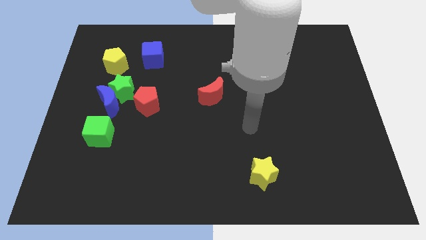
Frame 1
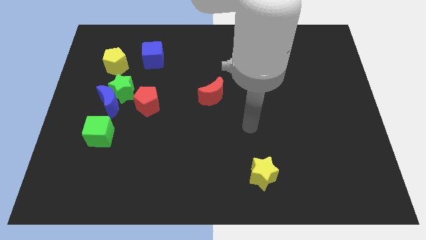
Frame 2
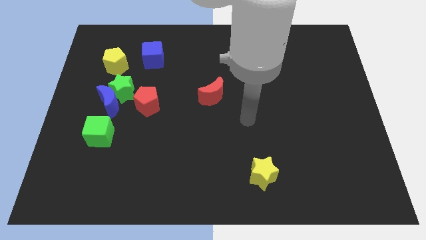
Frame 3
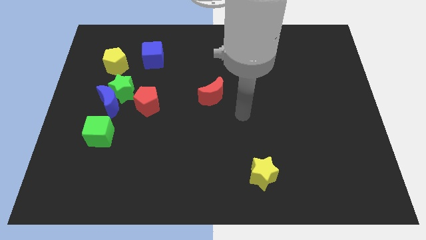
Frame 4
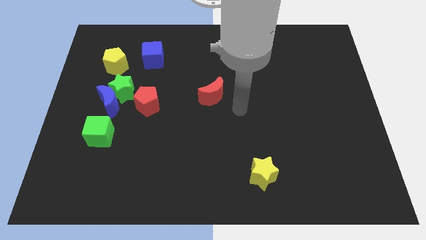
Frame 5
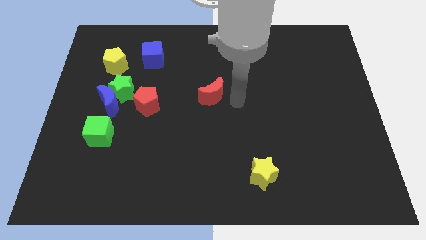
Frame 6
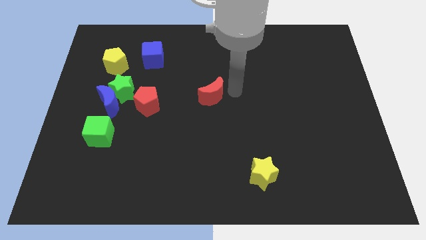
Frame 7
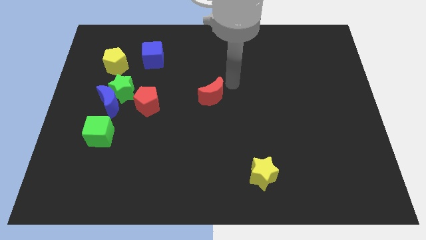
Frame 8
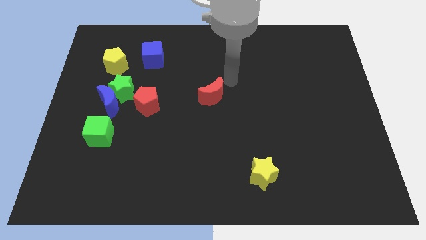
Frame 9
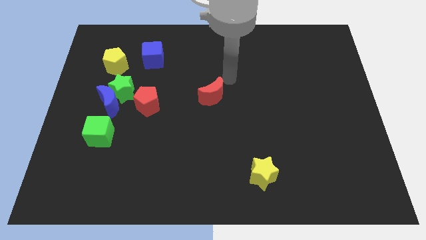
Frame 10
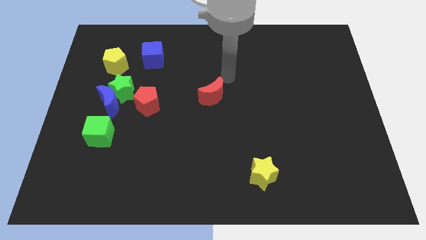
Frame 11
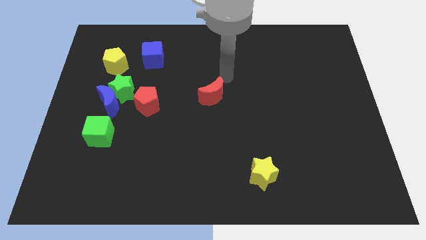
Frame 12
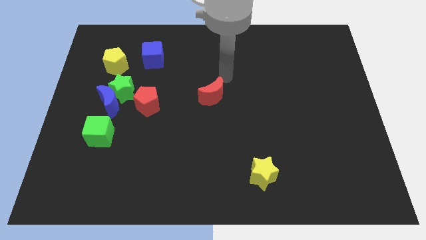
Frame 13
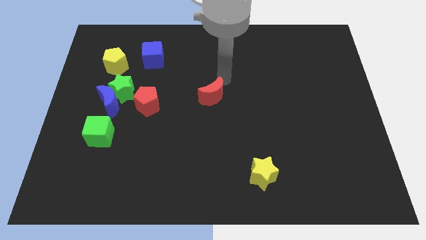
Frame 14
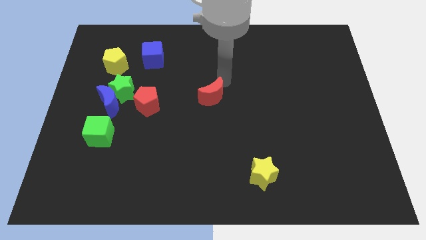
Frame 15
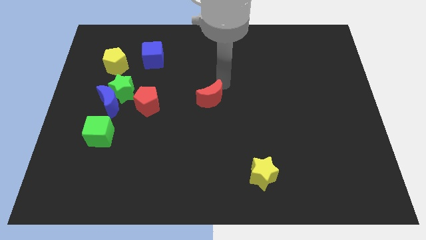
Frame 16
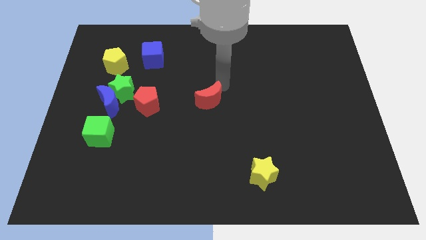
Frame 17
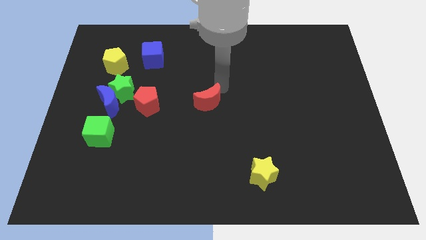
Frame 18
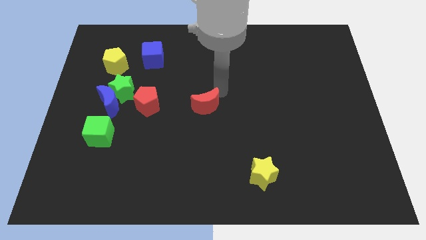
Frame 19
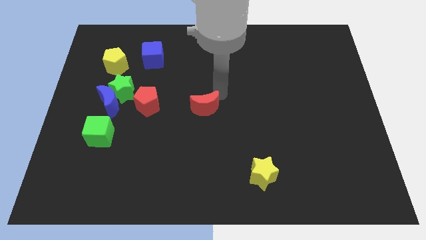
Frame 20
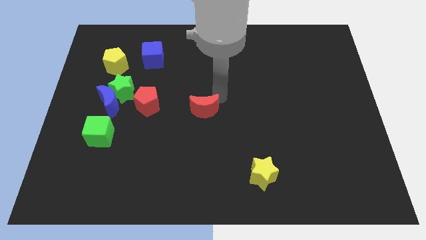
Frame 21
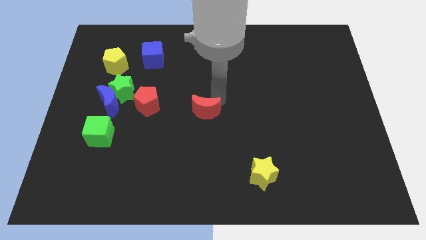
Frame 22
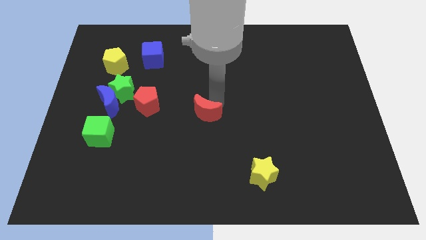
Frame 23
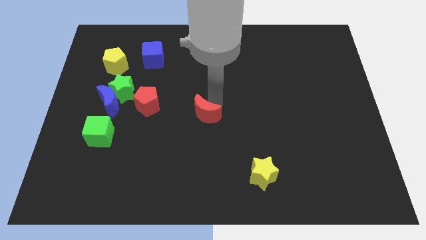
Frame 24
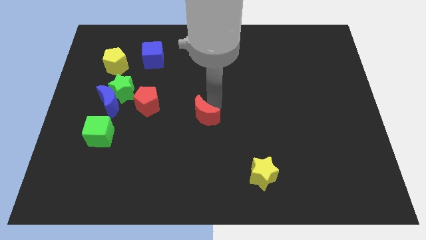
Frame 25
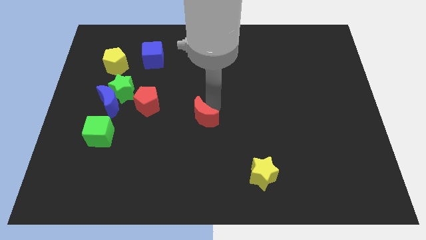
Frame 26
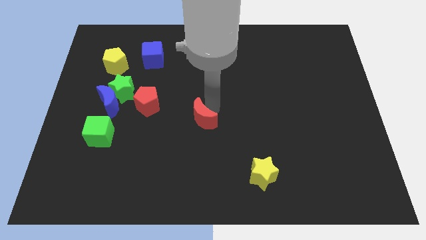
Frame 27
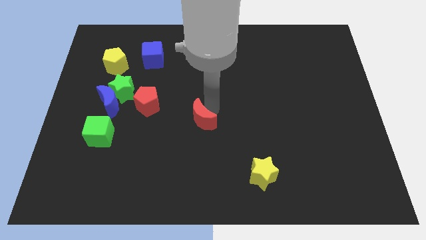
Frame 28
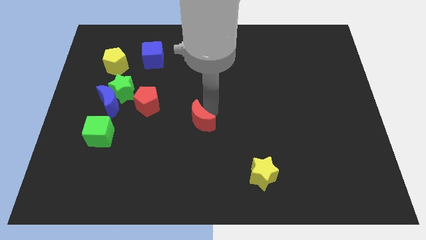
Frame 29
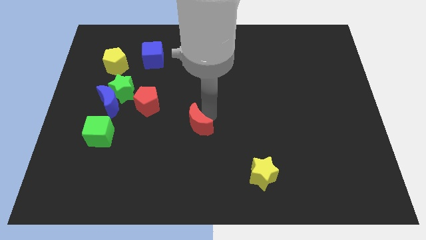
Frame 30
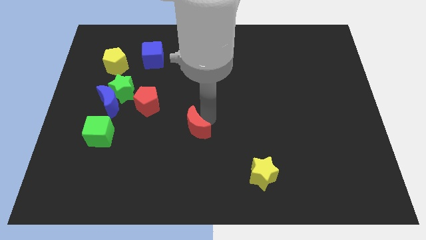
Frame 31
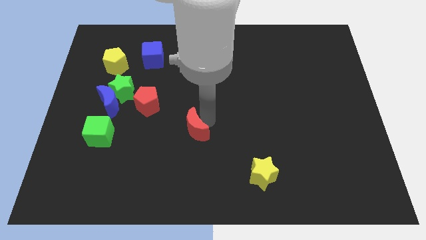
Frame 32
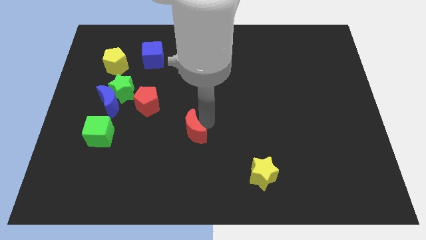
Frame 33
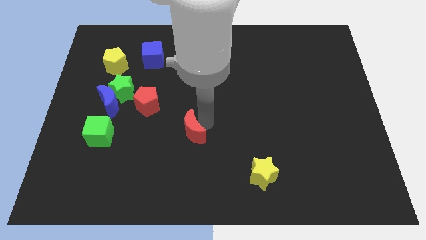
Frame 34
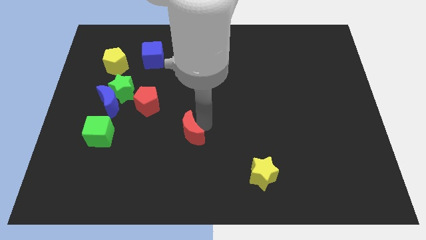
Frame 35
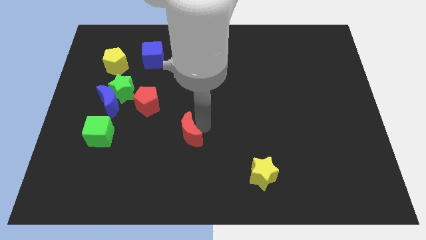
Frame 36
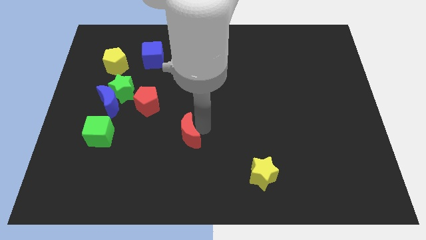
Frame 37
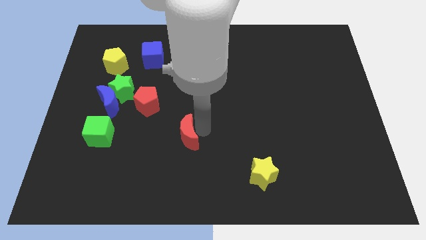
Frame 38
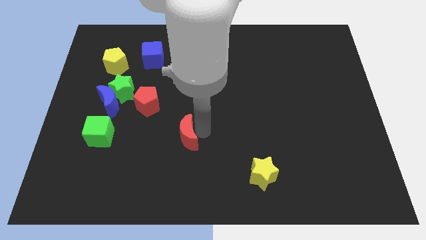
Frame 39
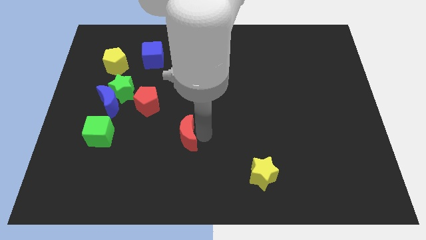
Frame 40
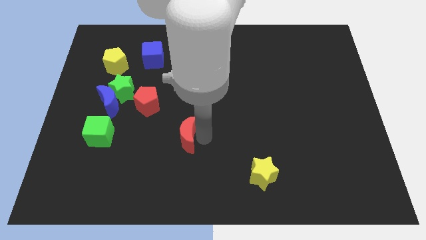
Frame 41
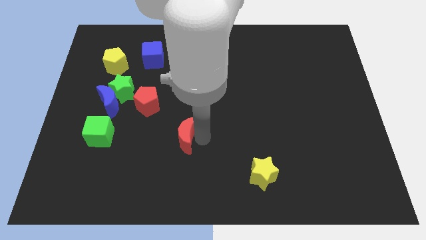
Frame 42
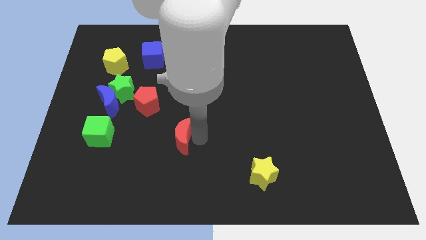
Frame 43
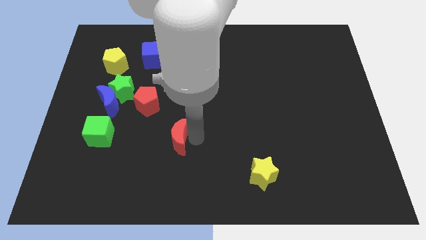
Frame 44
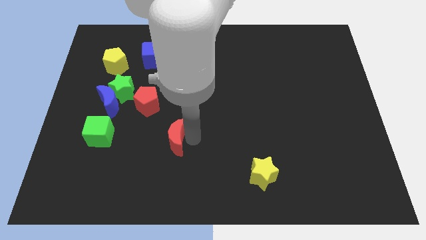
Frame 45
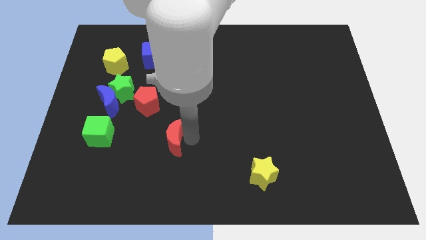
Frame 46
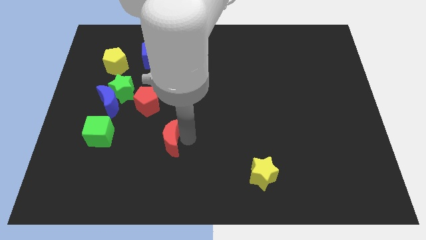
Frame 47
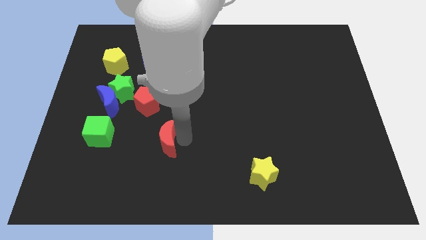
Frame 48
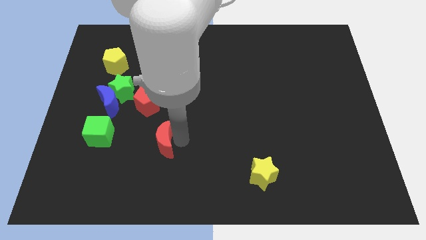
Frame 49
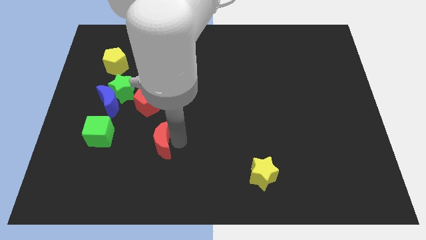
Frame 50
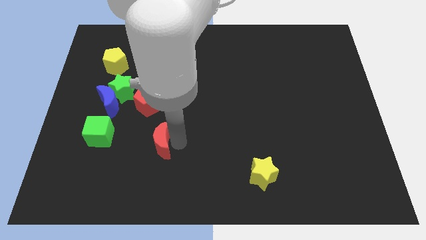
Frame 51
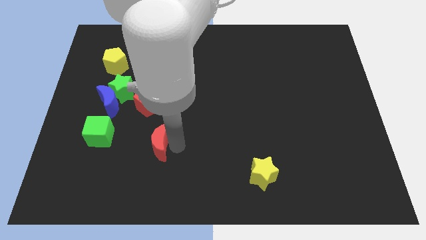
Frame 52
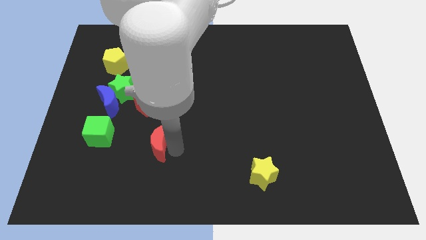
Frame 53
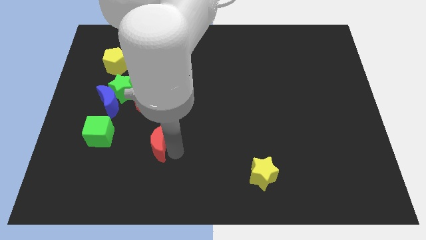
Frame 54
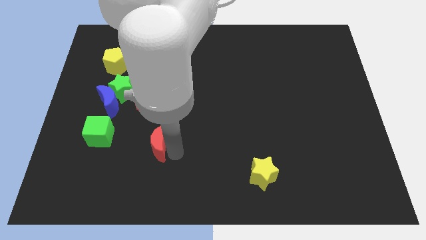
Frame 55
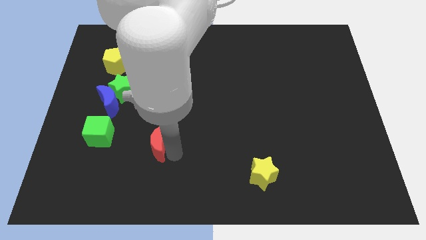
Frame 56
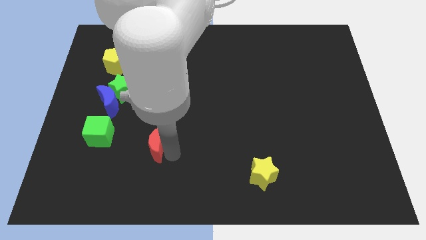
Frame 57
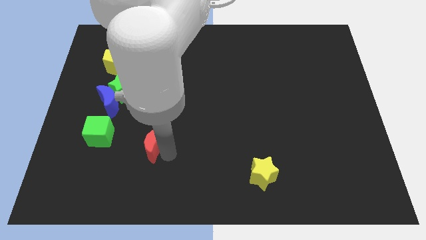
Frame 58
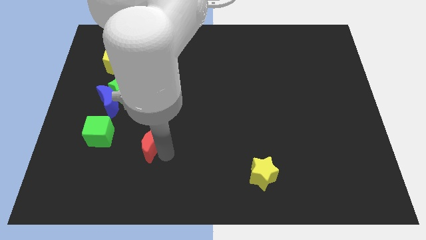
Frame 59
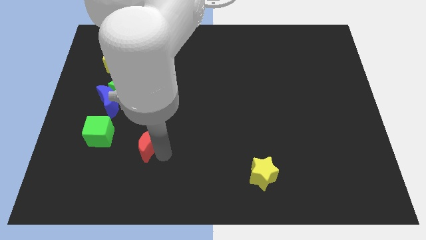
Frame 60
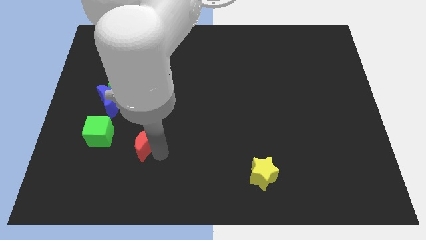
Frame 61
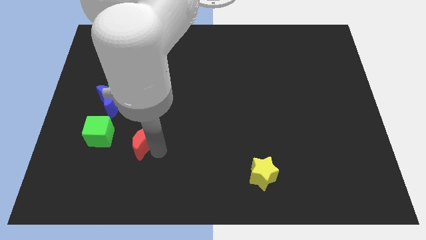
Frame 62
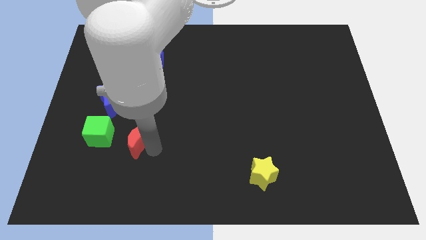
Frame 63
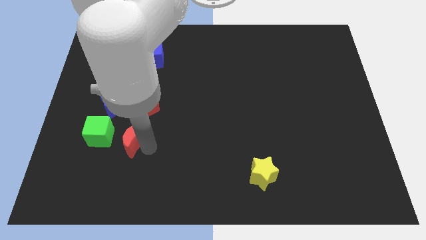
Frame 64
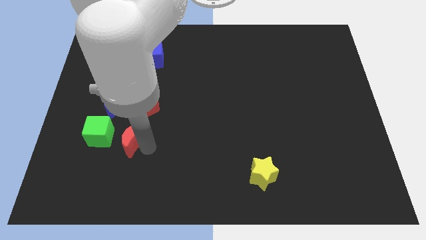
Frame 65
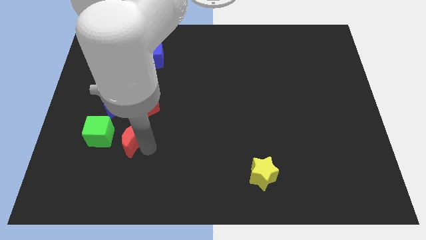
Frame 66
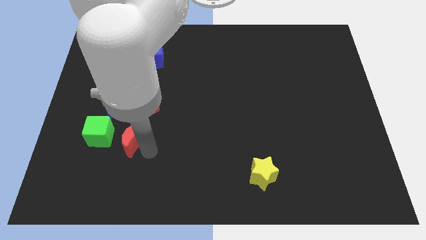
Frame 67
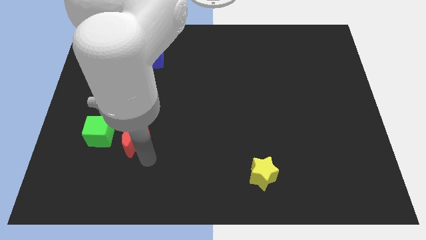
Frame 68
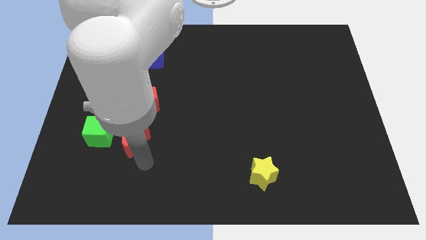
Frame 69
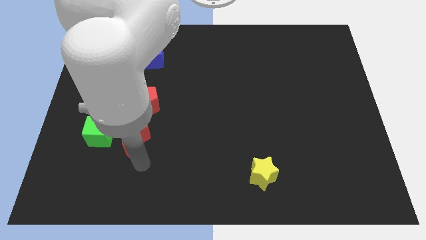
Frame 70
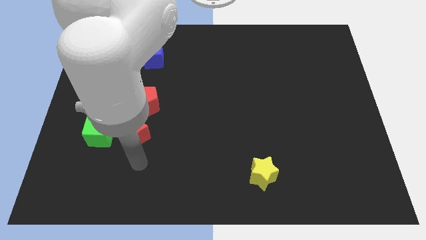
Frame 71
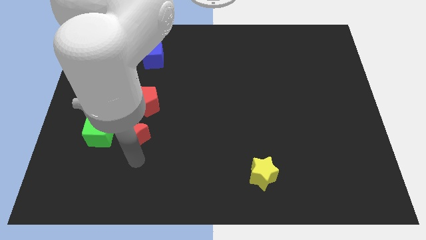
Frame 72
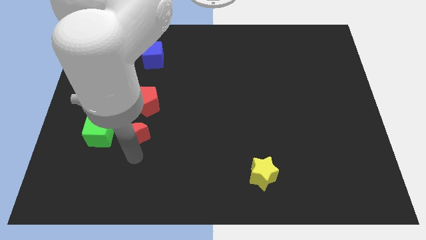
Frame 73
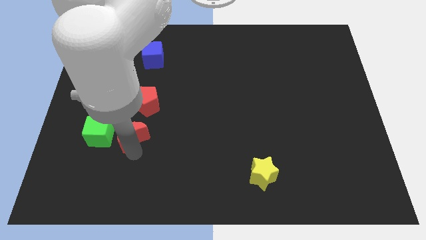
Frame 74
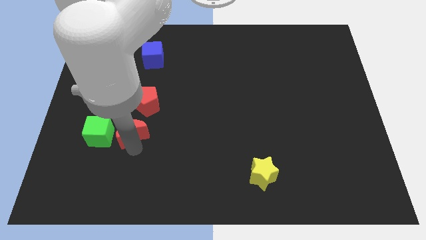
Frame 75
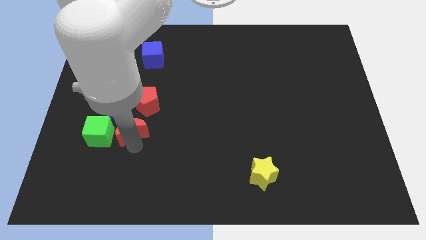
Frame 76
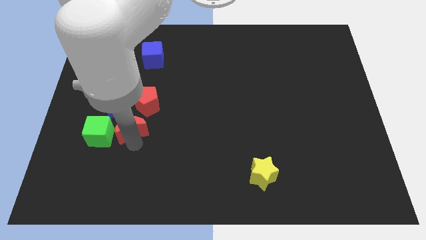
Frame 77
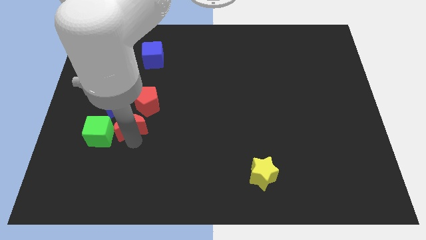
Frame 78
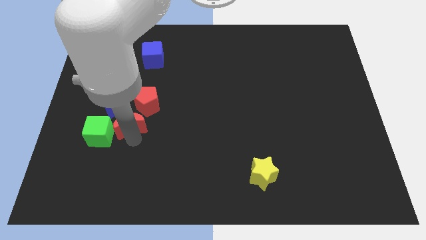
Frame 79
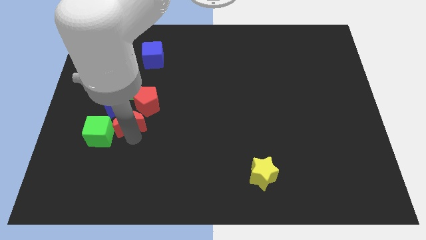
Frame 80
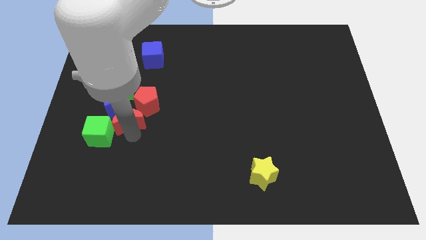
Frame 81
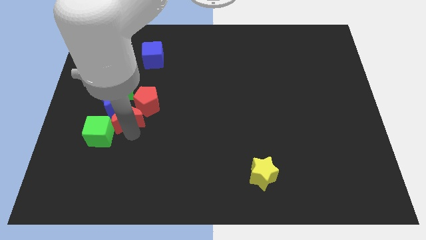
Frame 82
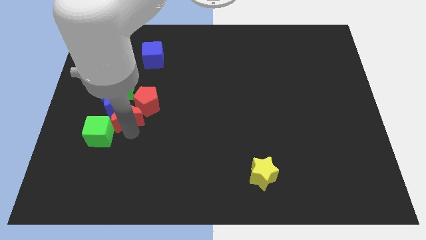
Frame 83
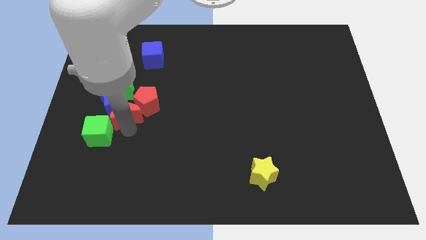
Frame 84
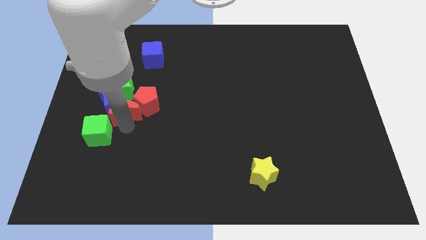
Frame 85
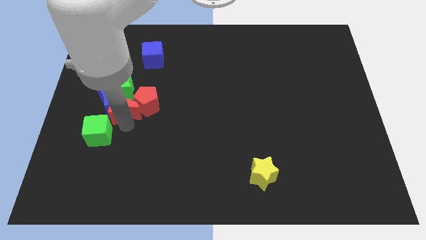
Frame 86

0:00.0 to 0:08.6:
put the red moon close to the blue moon
